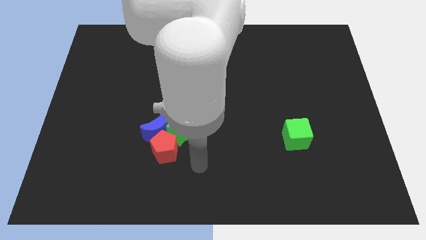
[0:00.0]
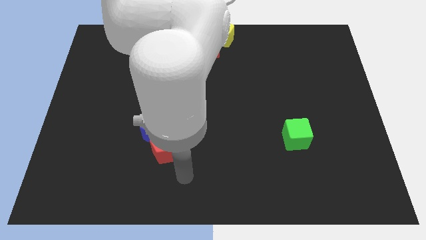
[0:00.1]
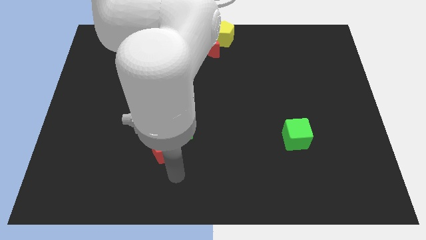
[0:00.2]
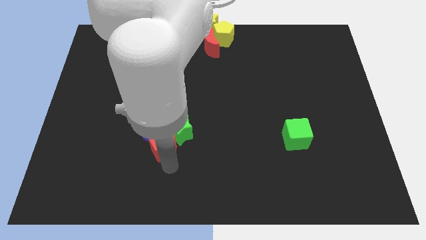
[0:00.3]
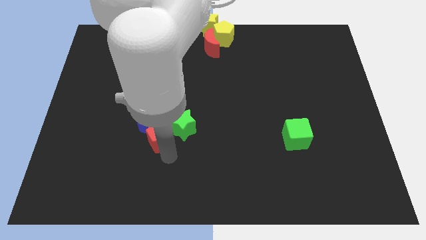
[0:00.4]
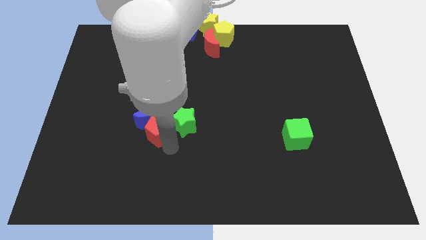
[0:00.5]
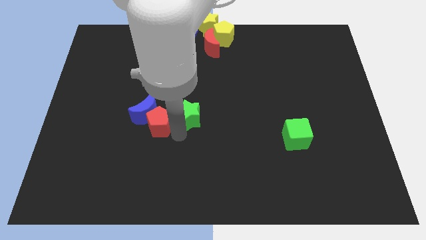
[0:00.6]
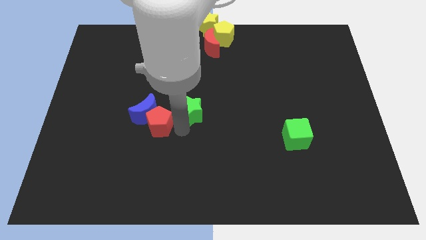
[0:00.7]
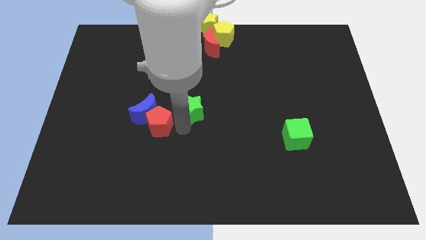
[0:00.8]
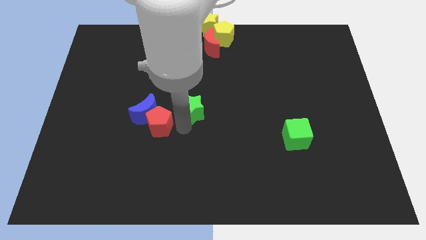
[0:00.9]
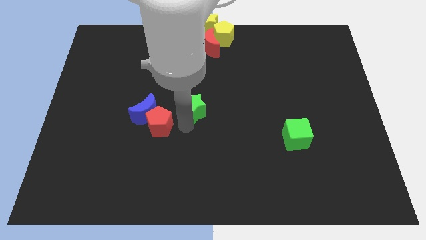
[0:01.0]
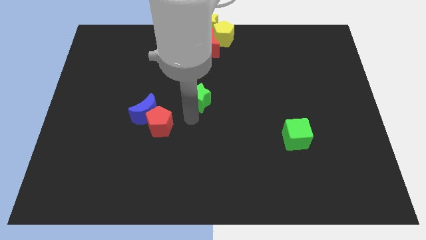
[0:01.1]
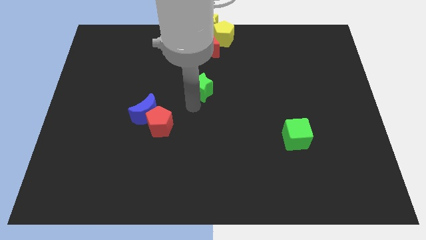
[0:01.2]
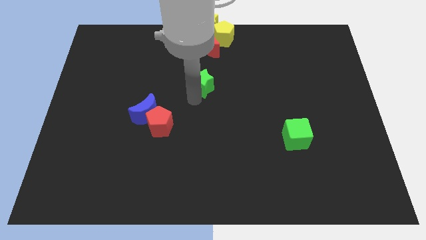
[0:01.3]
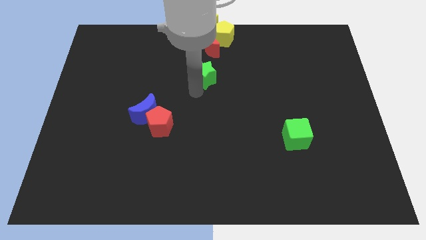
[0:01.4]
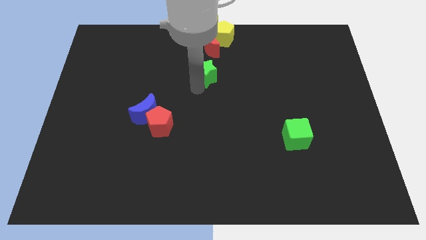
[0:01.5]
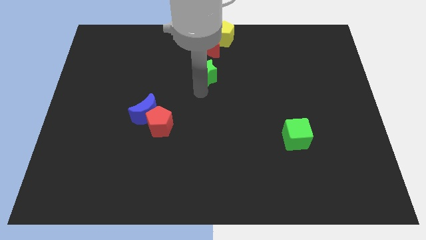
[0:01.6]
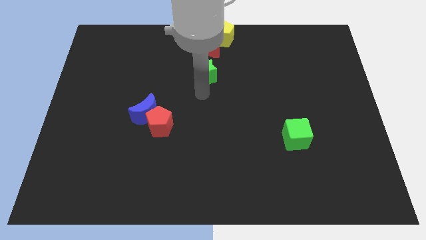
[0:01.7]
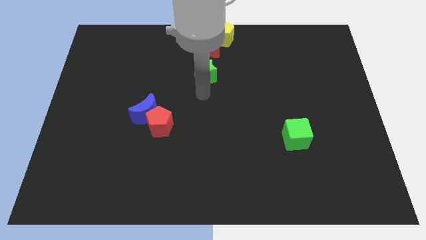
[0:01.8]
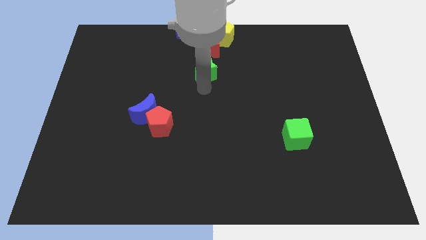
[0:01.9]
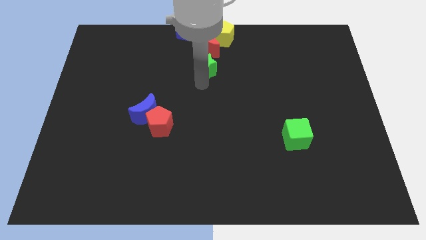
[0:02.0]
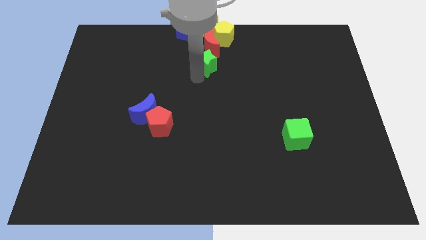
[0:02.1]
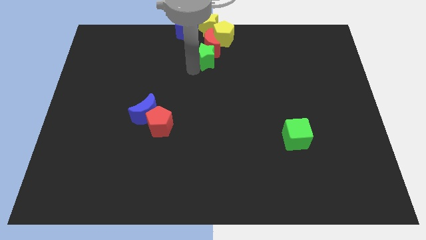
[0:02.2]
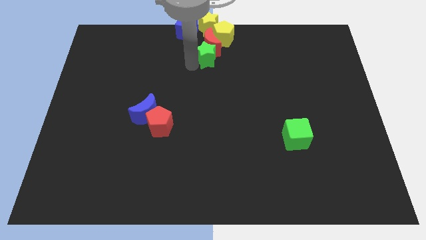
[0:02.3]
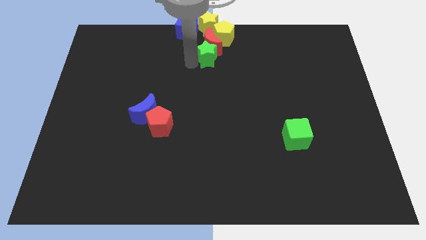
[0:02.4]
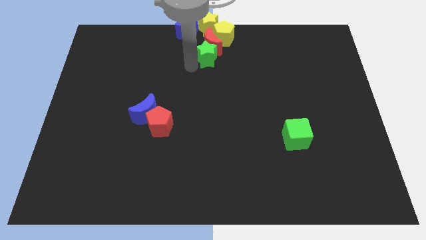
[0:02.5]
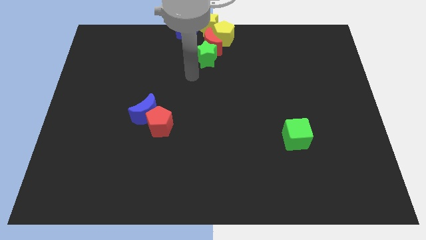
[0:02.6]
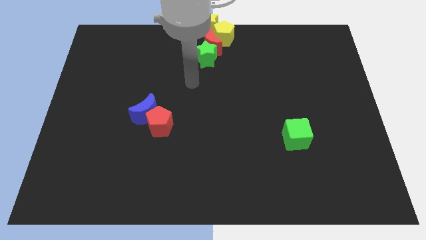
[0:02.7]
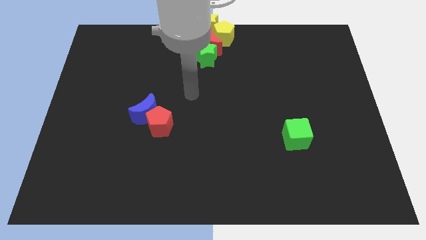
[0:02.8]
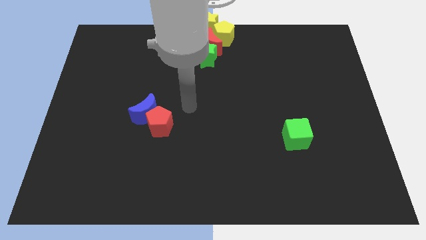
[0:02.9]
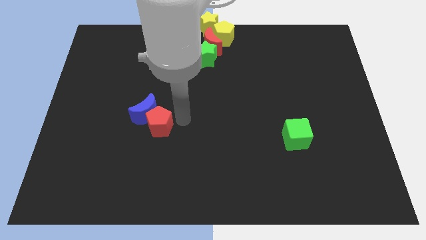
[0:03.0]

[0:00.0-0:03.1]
push the green star to the bottom left of red moon

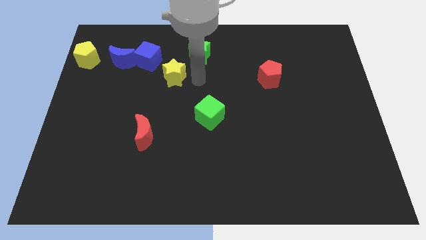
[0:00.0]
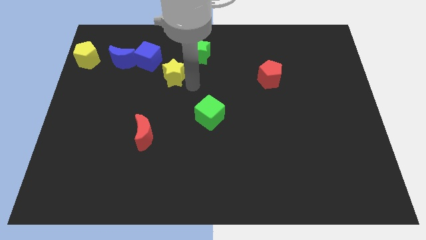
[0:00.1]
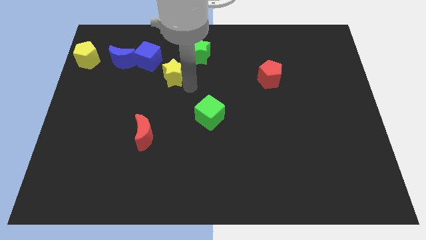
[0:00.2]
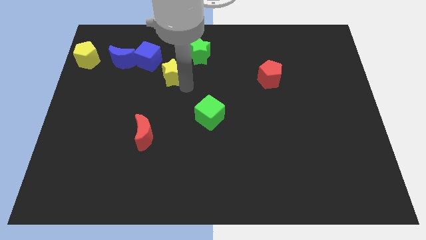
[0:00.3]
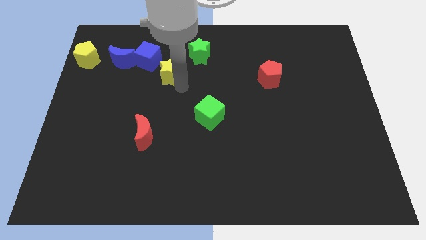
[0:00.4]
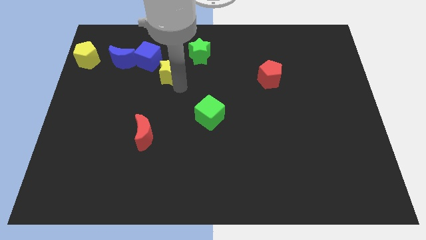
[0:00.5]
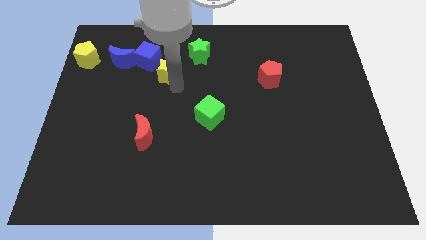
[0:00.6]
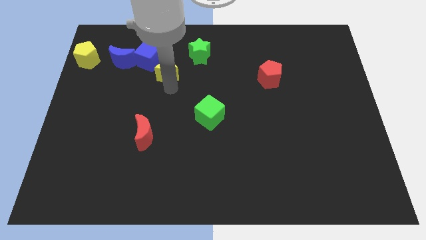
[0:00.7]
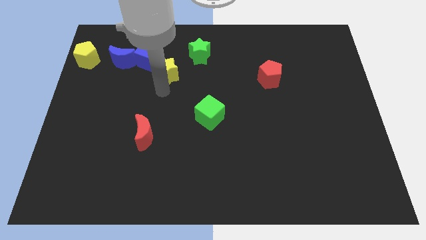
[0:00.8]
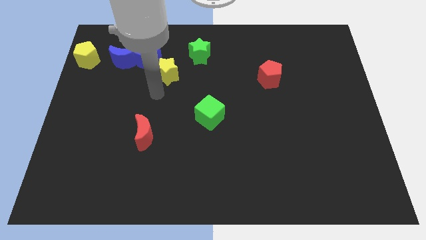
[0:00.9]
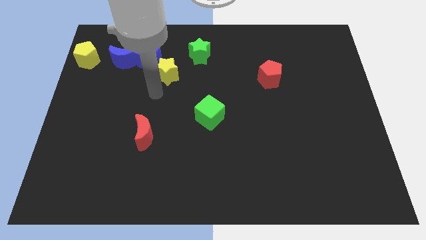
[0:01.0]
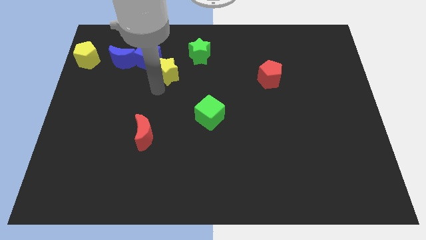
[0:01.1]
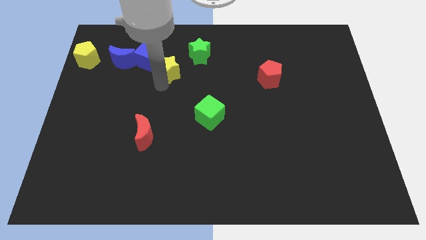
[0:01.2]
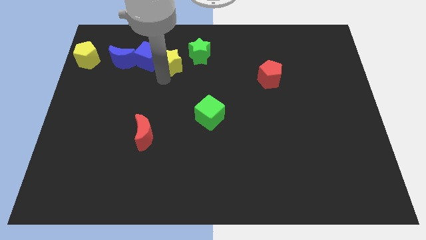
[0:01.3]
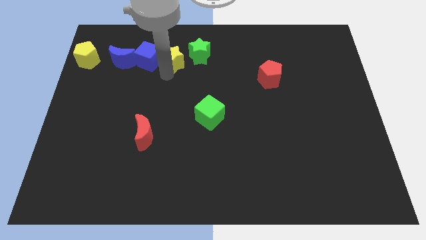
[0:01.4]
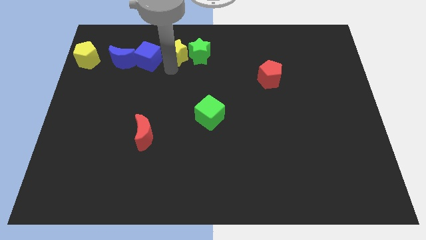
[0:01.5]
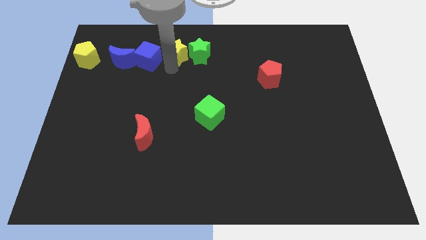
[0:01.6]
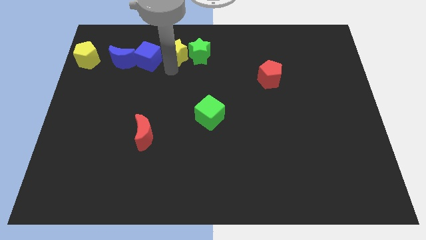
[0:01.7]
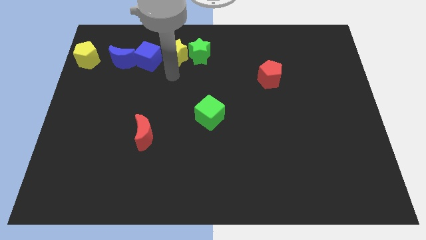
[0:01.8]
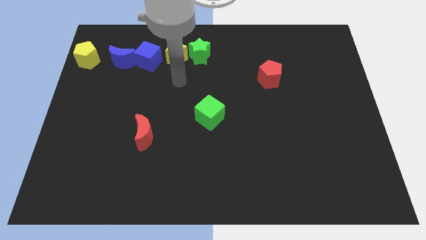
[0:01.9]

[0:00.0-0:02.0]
push the yellow between green star and blue cube

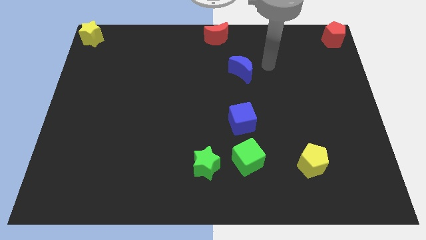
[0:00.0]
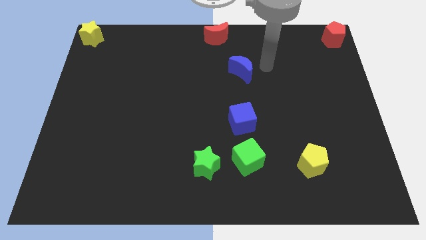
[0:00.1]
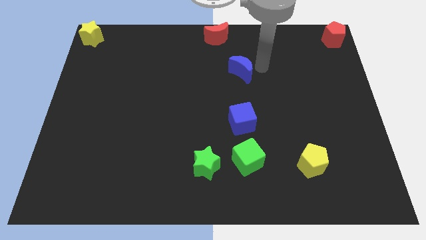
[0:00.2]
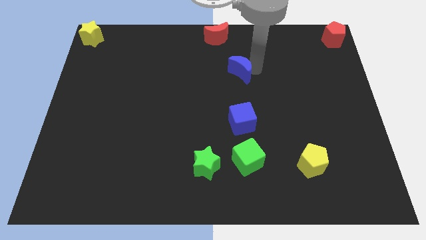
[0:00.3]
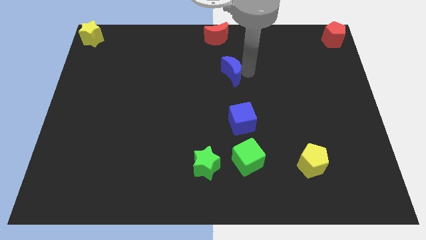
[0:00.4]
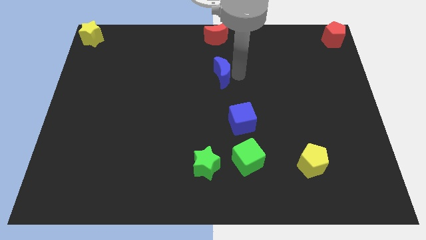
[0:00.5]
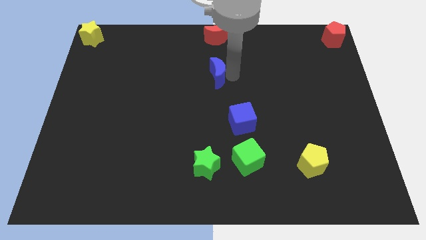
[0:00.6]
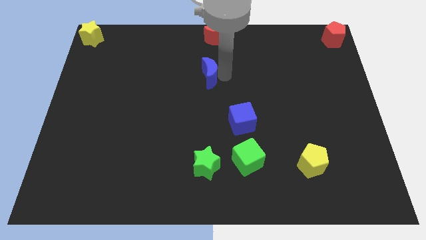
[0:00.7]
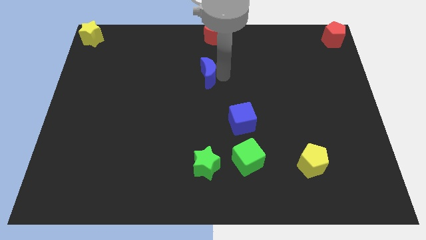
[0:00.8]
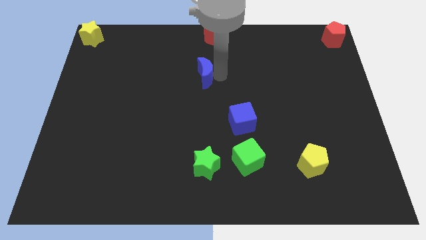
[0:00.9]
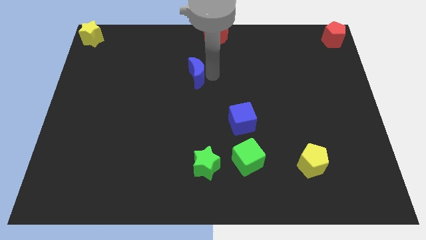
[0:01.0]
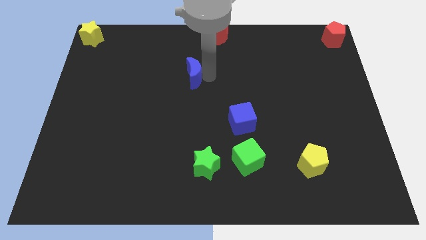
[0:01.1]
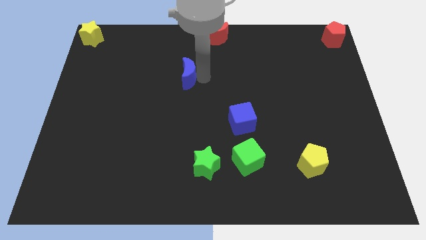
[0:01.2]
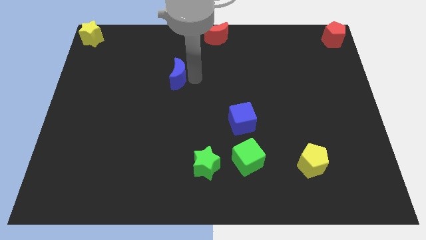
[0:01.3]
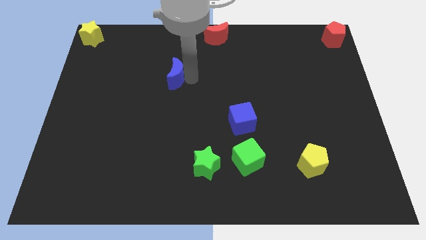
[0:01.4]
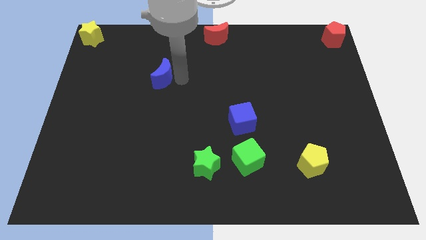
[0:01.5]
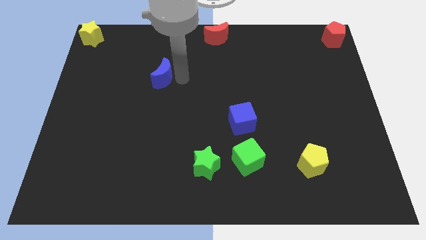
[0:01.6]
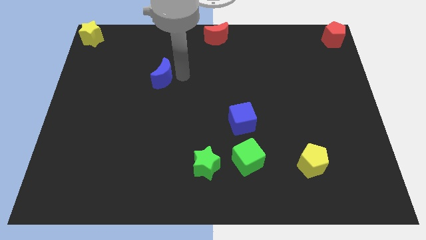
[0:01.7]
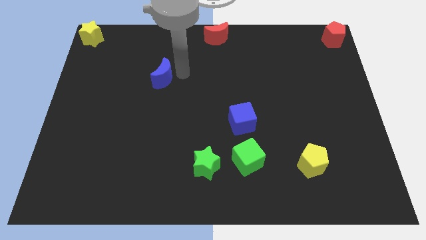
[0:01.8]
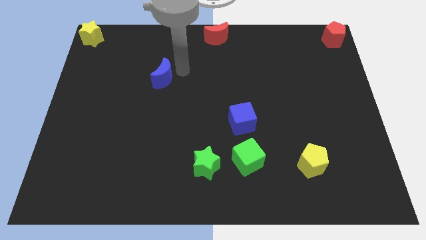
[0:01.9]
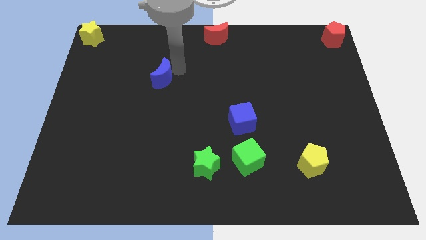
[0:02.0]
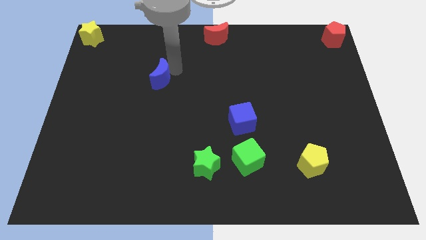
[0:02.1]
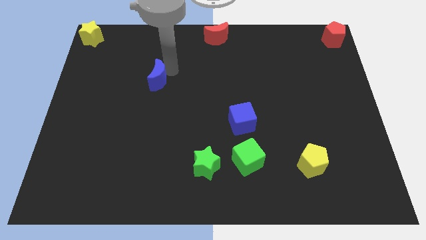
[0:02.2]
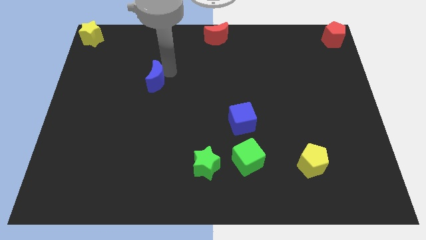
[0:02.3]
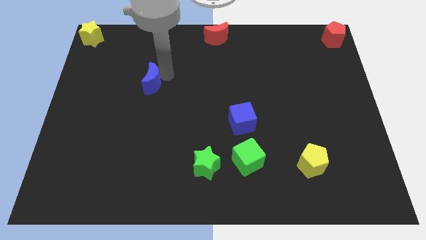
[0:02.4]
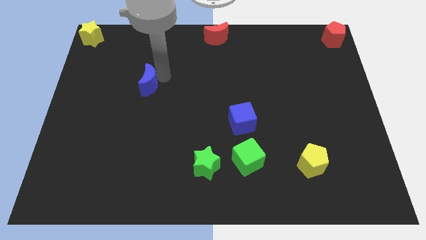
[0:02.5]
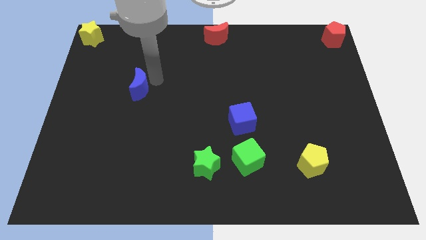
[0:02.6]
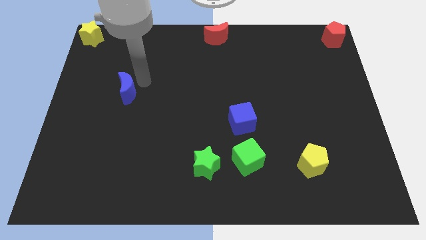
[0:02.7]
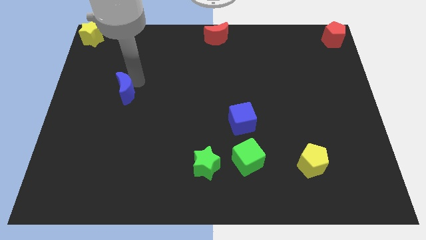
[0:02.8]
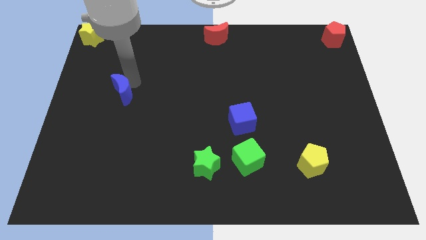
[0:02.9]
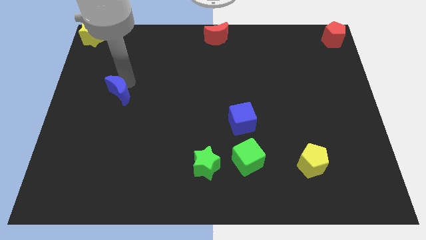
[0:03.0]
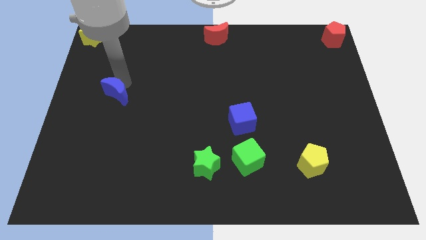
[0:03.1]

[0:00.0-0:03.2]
slide the blue crescent towards the left center

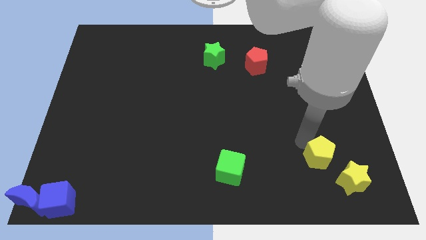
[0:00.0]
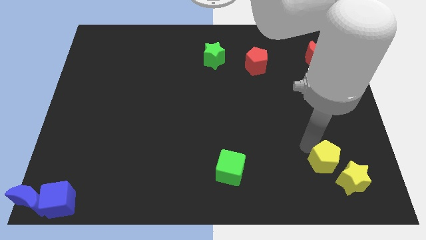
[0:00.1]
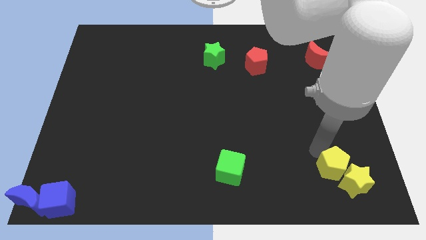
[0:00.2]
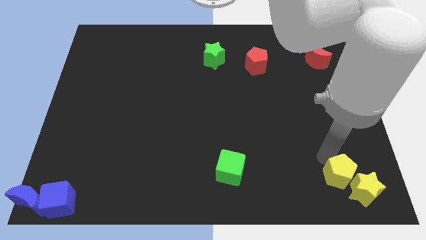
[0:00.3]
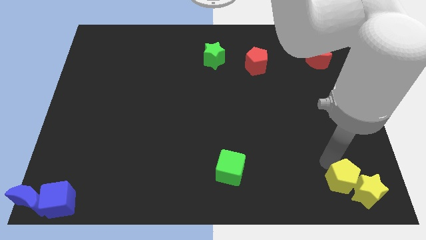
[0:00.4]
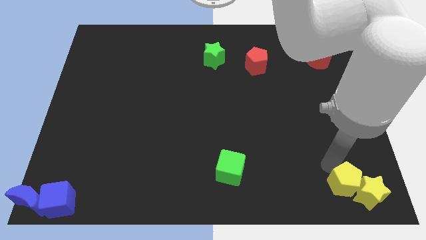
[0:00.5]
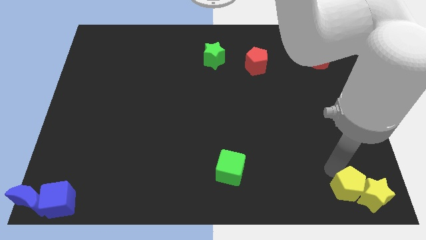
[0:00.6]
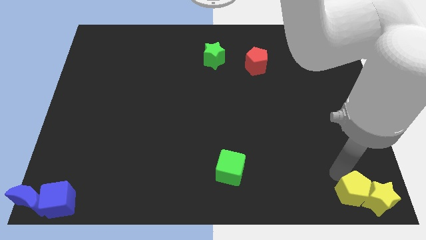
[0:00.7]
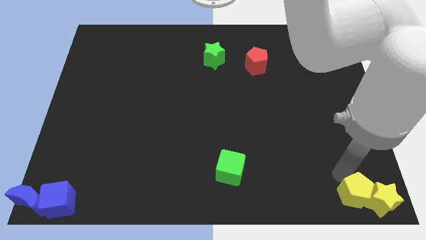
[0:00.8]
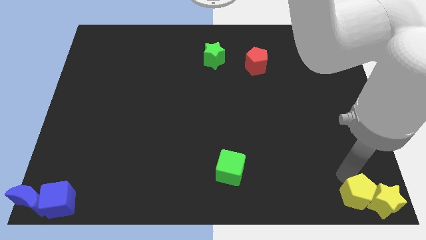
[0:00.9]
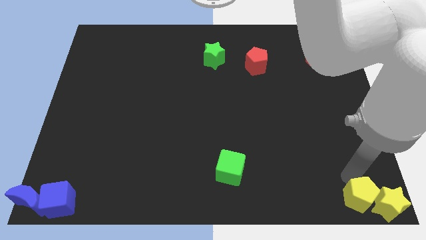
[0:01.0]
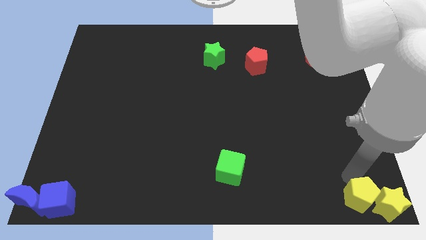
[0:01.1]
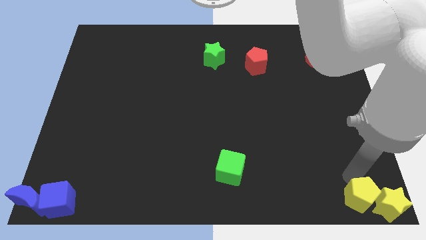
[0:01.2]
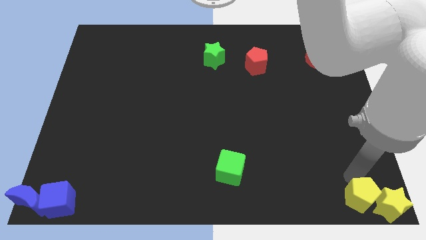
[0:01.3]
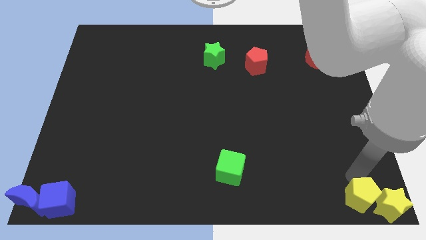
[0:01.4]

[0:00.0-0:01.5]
place the yellow blocks horizontally to the right side of the blue blocks
